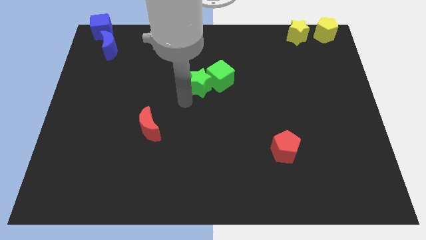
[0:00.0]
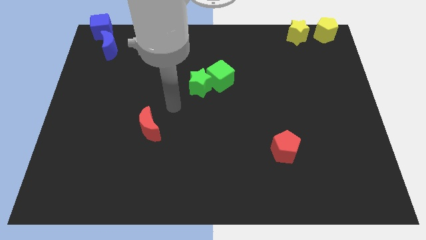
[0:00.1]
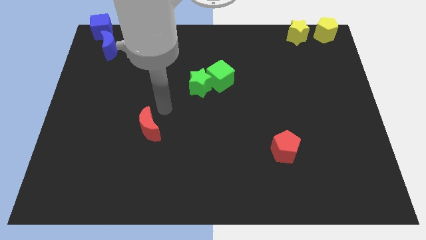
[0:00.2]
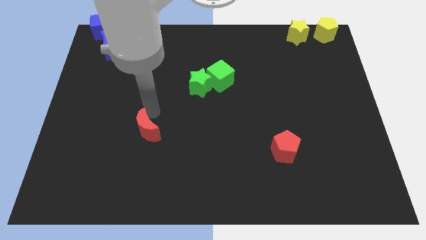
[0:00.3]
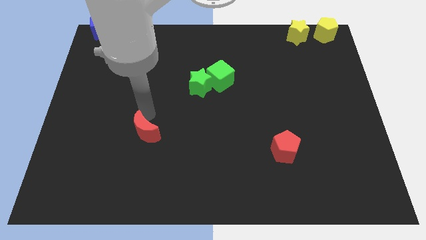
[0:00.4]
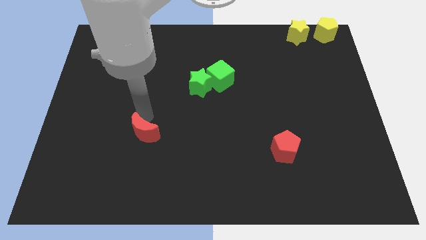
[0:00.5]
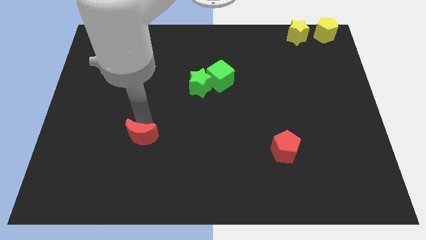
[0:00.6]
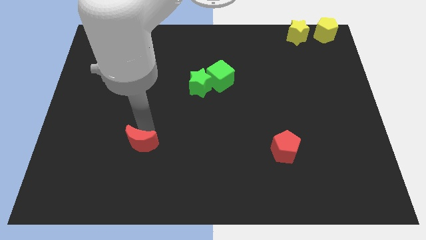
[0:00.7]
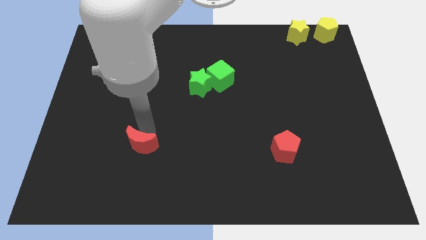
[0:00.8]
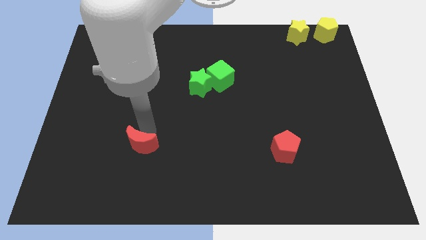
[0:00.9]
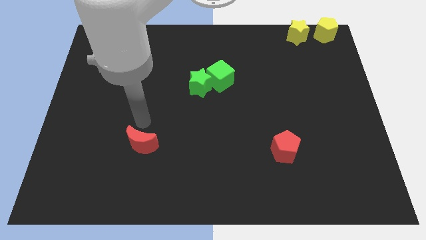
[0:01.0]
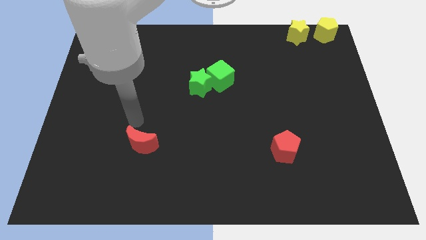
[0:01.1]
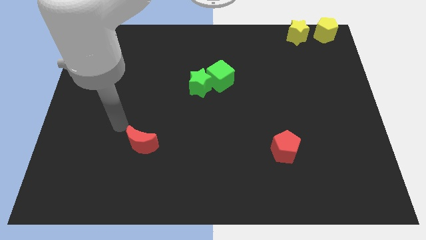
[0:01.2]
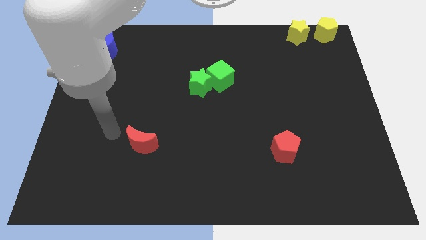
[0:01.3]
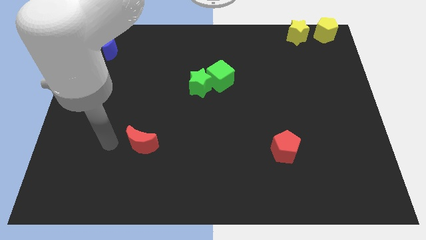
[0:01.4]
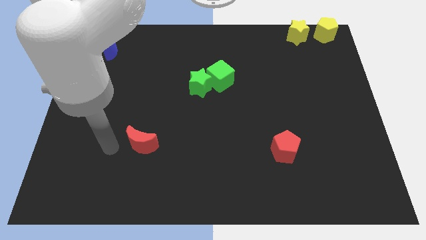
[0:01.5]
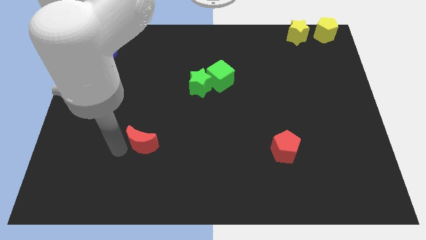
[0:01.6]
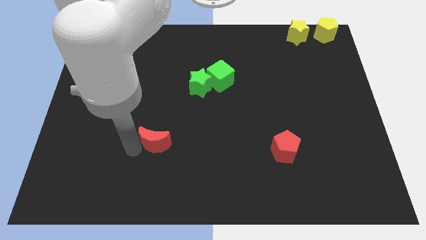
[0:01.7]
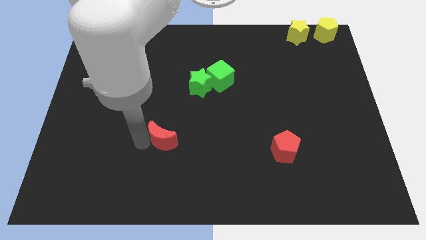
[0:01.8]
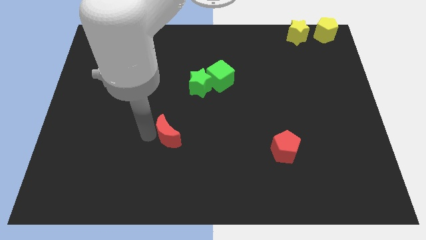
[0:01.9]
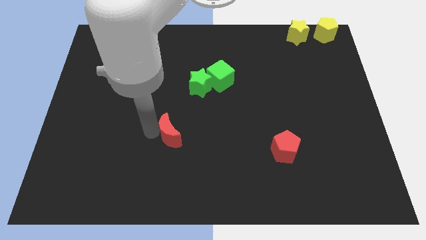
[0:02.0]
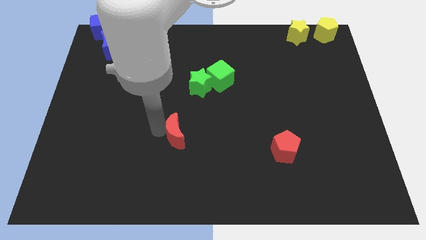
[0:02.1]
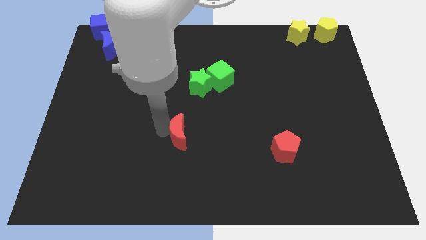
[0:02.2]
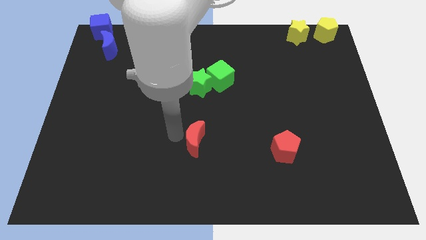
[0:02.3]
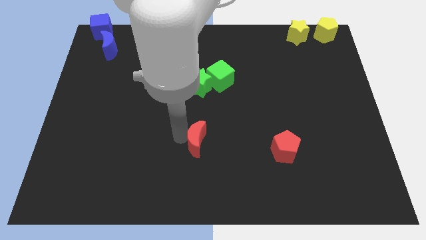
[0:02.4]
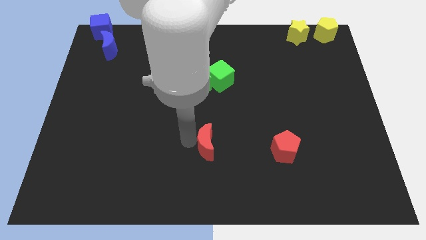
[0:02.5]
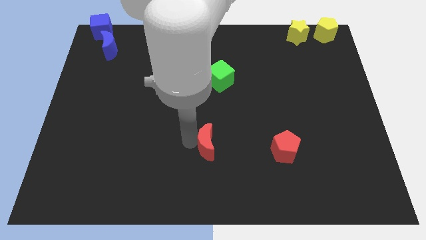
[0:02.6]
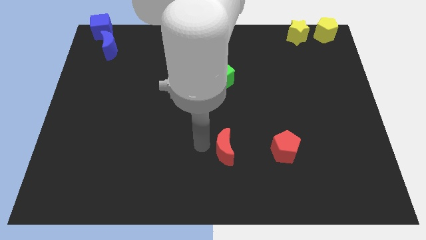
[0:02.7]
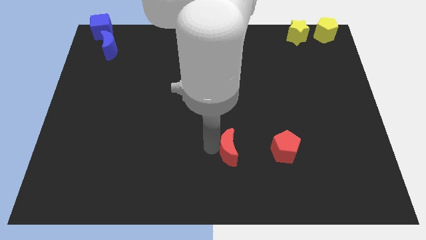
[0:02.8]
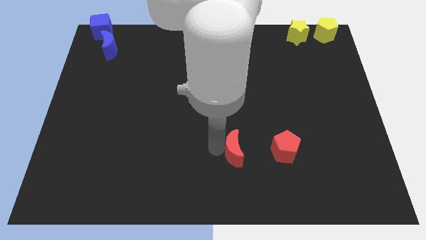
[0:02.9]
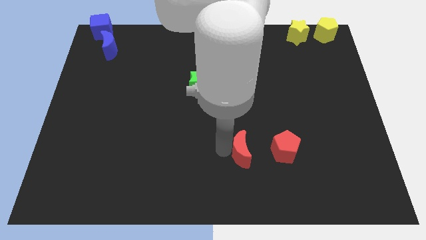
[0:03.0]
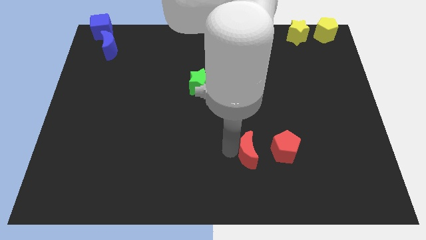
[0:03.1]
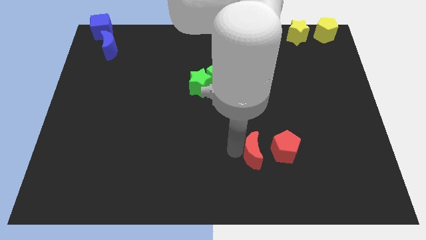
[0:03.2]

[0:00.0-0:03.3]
push the red crescent to the left of the red pentagon

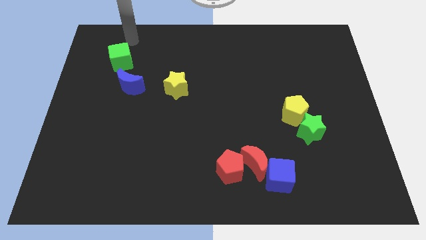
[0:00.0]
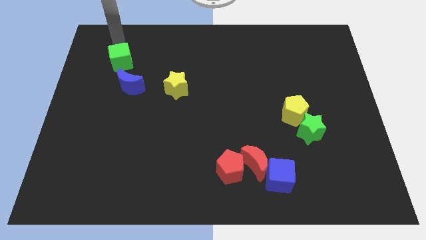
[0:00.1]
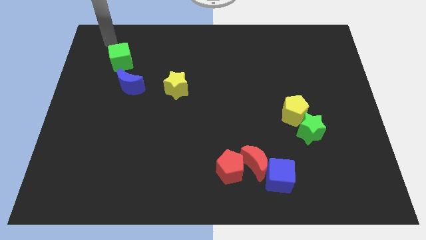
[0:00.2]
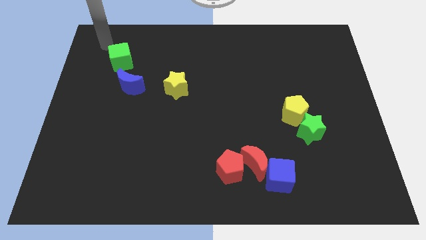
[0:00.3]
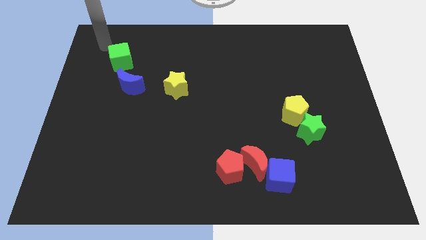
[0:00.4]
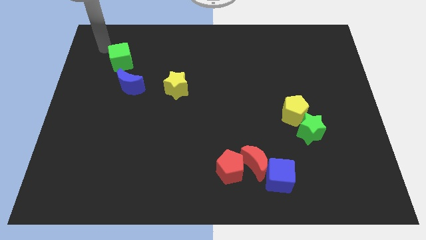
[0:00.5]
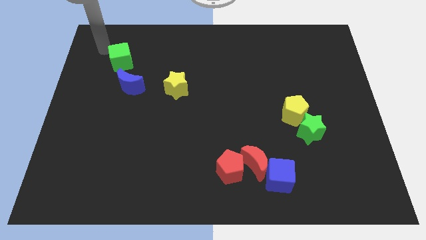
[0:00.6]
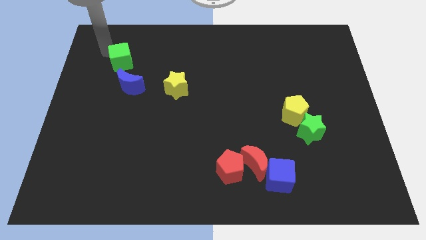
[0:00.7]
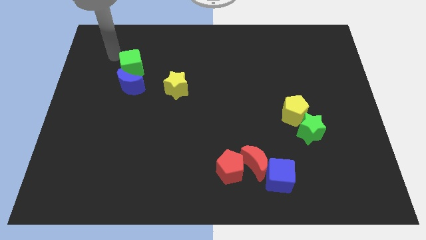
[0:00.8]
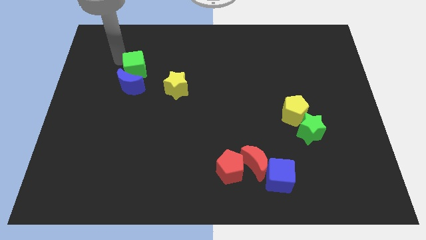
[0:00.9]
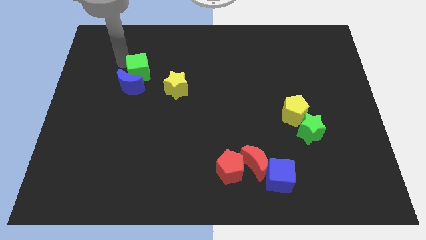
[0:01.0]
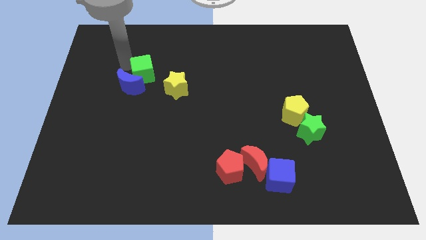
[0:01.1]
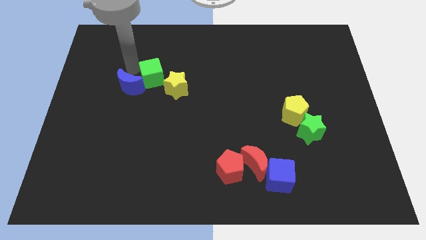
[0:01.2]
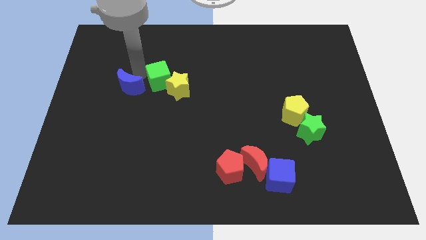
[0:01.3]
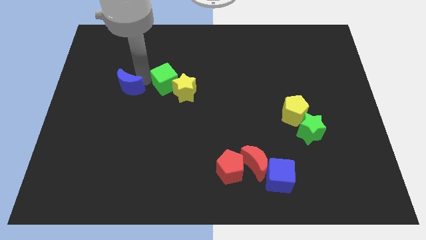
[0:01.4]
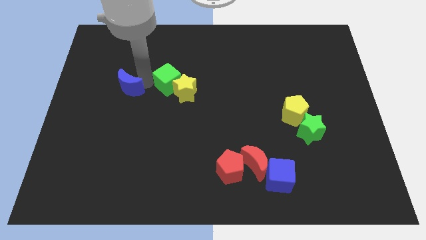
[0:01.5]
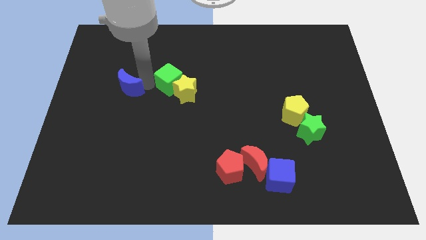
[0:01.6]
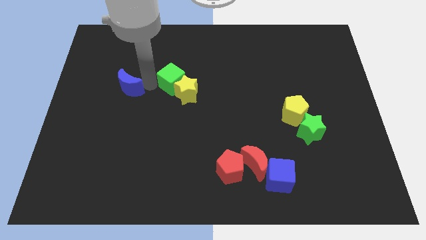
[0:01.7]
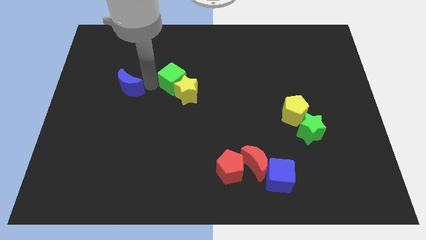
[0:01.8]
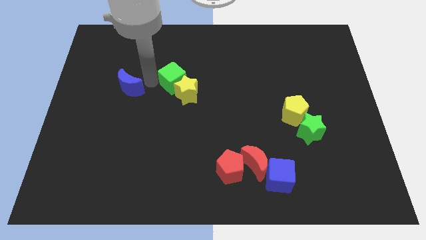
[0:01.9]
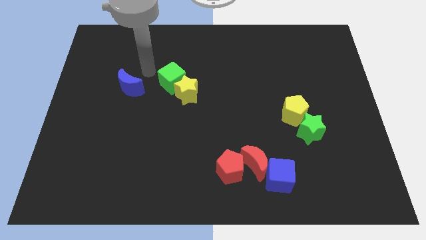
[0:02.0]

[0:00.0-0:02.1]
push the green cube into the yellow star

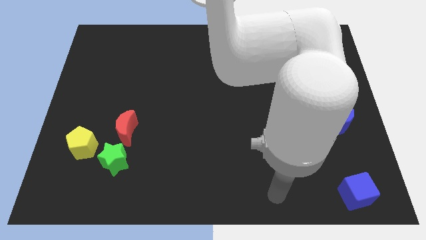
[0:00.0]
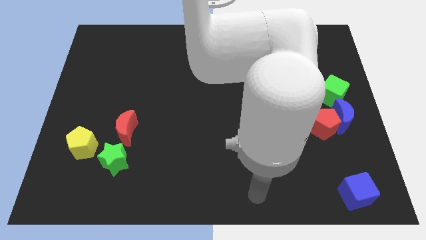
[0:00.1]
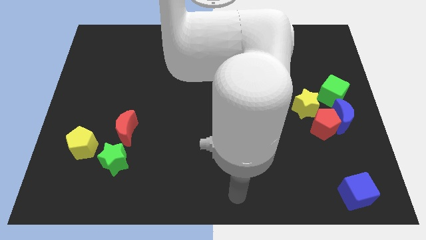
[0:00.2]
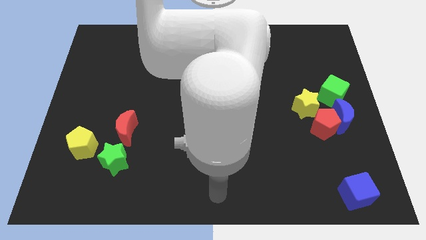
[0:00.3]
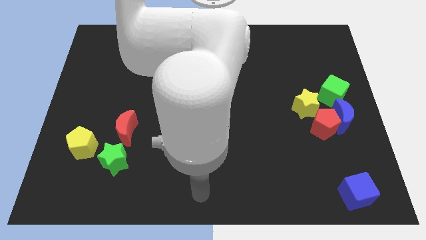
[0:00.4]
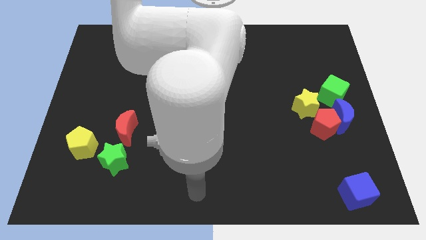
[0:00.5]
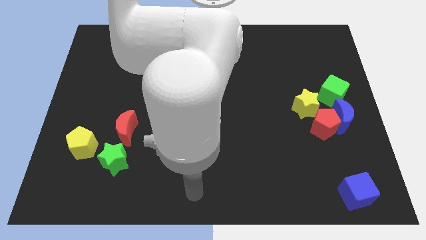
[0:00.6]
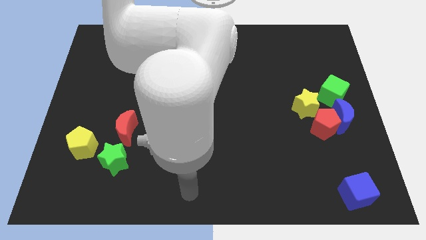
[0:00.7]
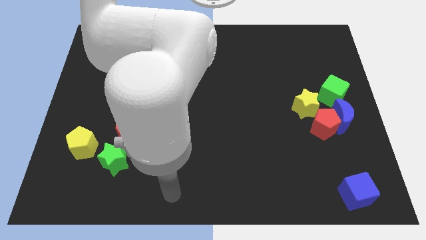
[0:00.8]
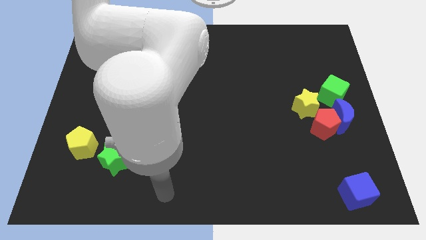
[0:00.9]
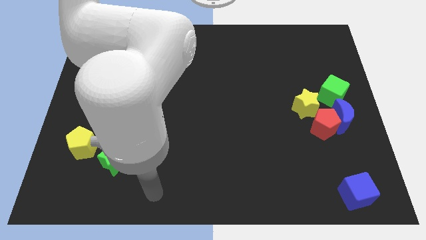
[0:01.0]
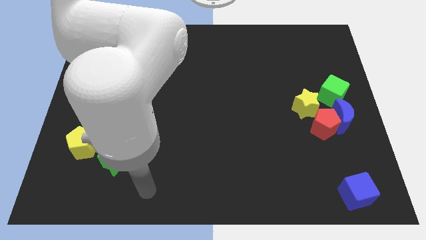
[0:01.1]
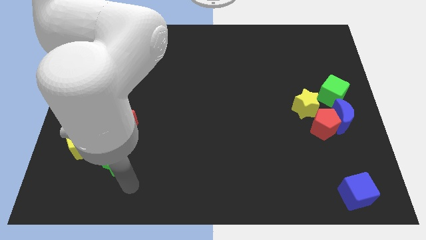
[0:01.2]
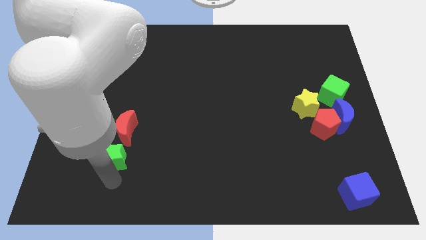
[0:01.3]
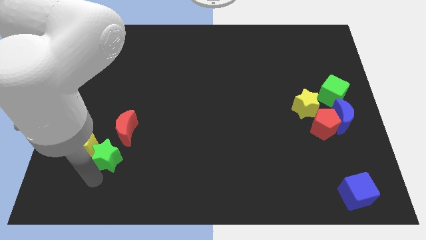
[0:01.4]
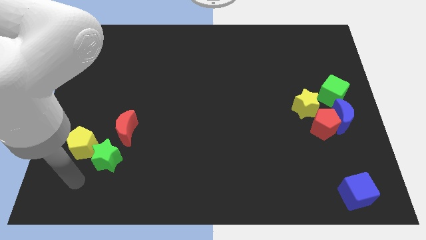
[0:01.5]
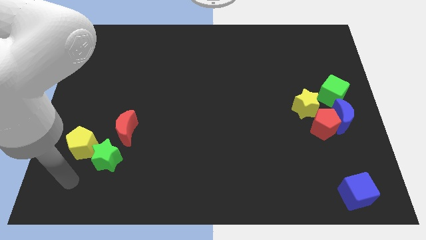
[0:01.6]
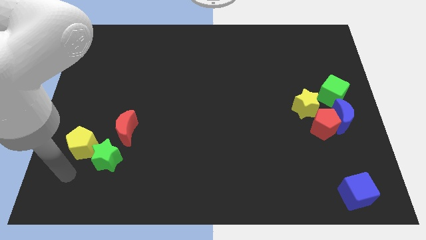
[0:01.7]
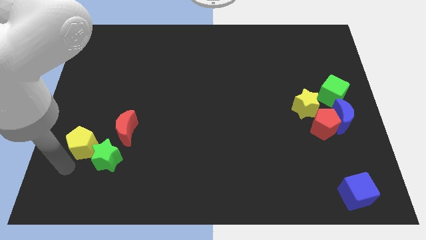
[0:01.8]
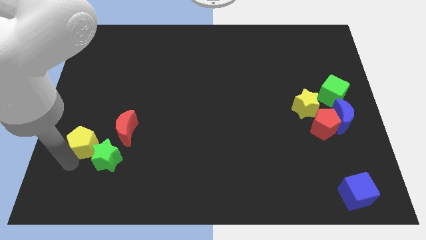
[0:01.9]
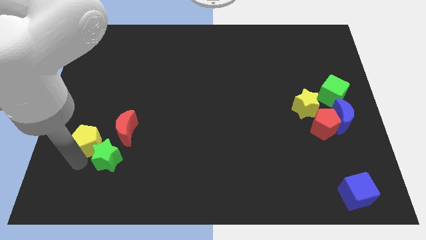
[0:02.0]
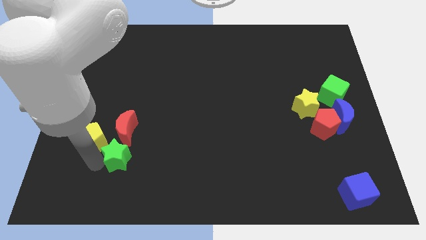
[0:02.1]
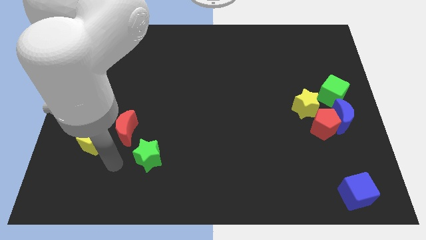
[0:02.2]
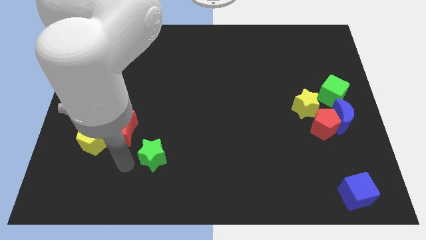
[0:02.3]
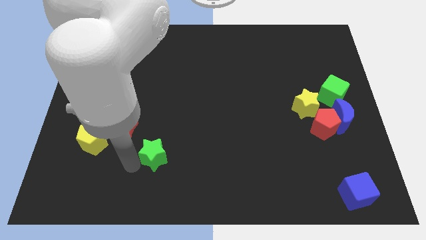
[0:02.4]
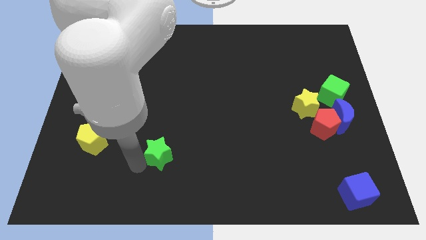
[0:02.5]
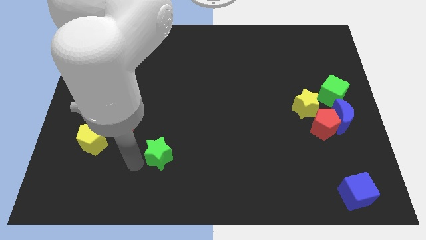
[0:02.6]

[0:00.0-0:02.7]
separate the green star from the yellow pentagon

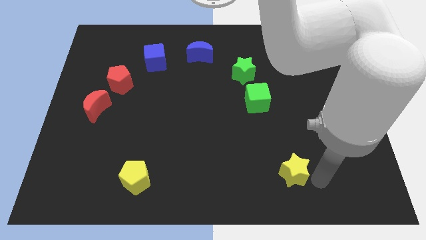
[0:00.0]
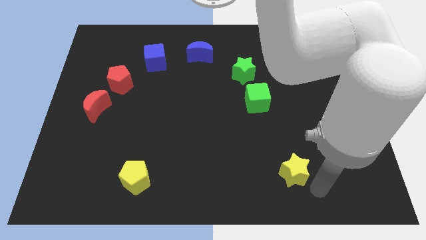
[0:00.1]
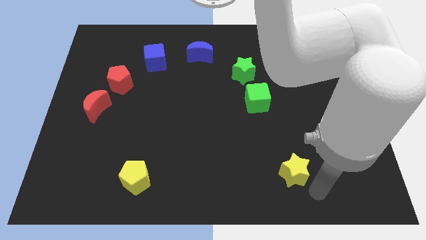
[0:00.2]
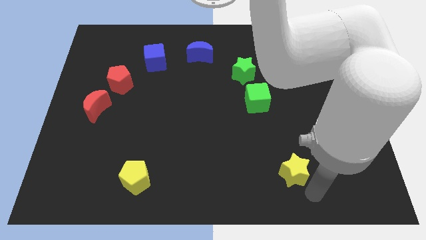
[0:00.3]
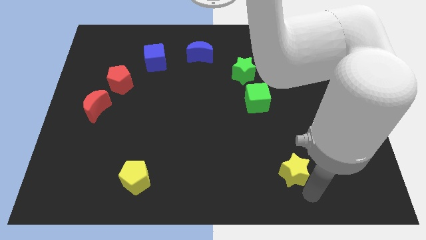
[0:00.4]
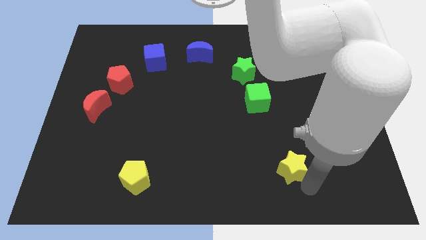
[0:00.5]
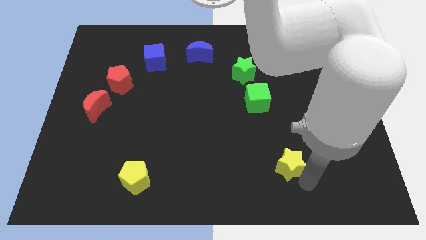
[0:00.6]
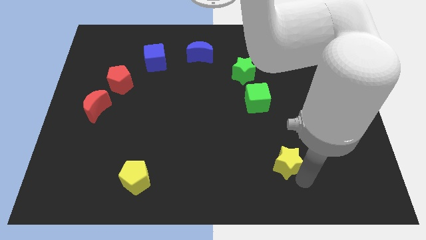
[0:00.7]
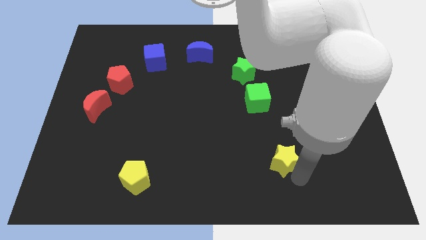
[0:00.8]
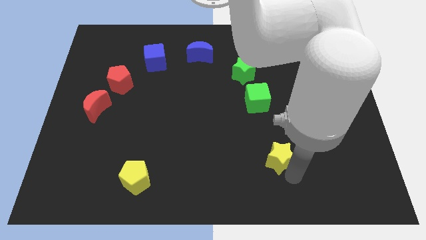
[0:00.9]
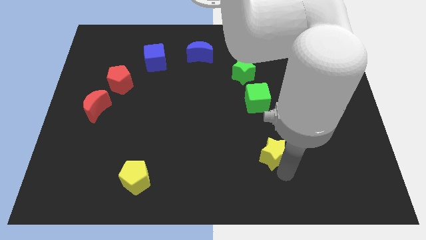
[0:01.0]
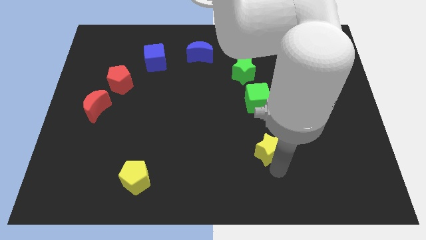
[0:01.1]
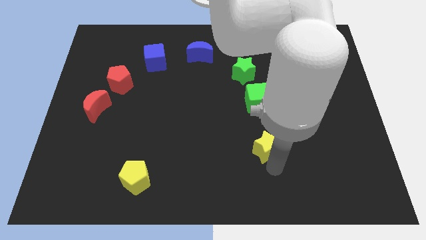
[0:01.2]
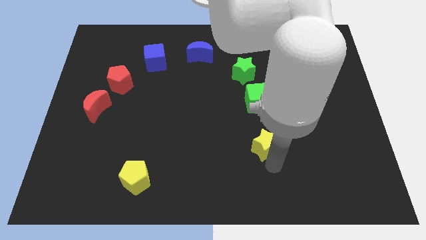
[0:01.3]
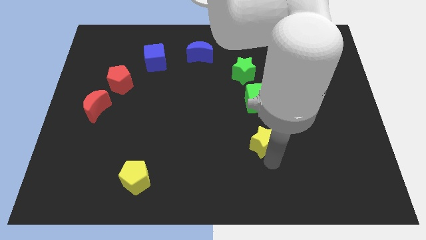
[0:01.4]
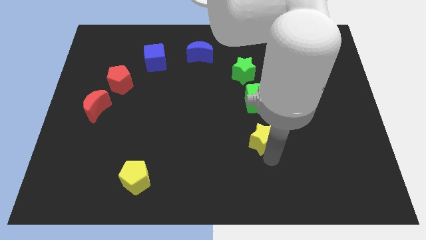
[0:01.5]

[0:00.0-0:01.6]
place yellow star below the green cube
